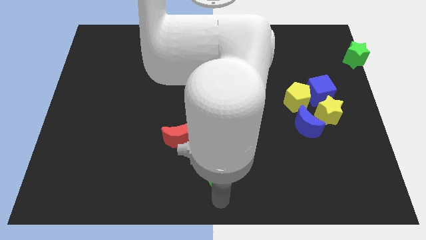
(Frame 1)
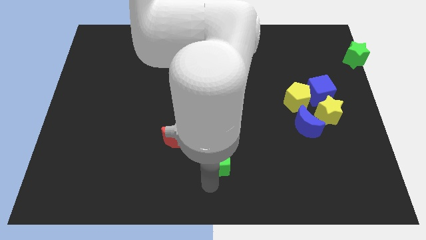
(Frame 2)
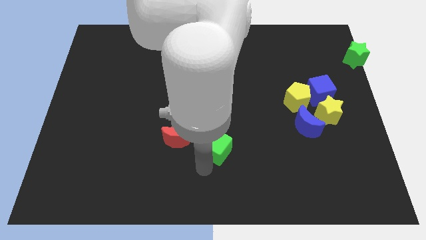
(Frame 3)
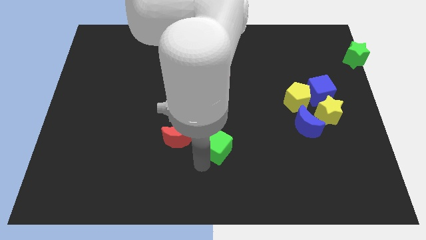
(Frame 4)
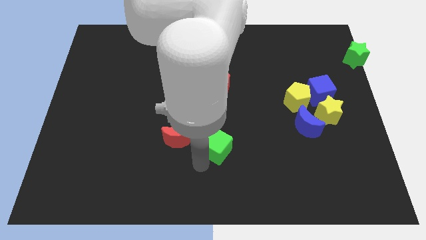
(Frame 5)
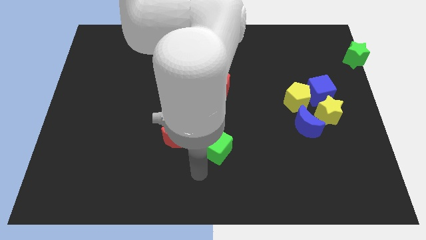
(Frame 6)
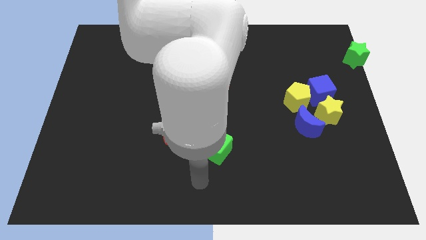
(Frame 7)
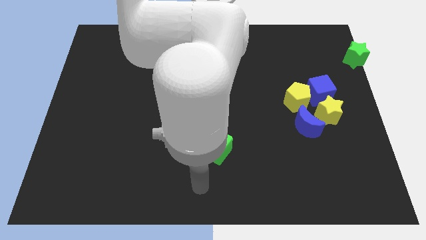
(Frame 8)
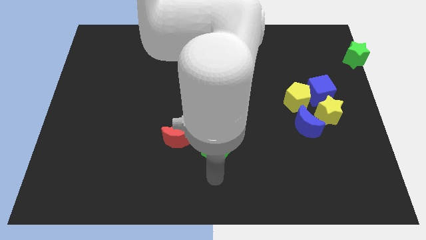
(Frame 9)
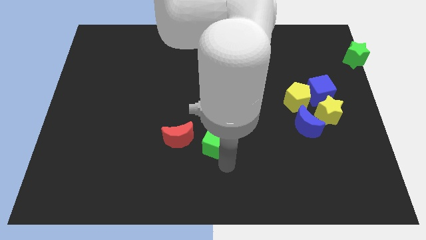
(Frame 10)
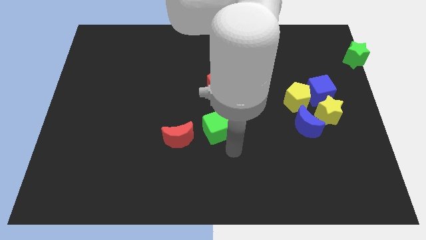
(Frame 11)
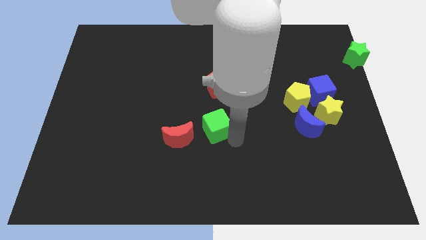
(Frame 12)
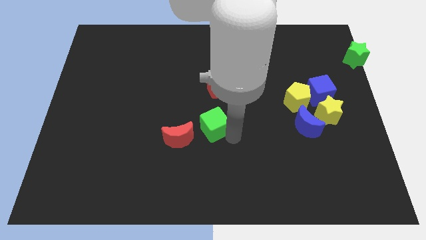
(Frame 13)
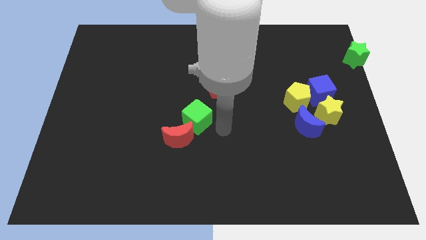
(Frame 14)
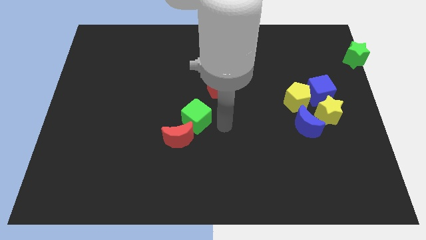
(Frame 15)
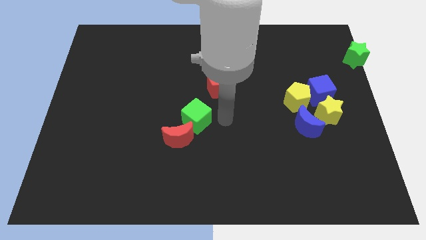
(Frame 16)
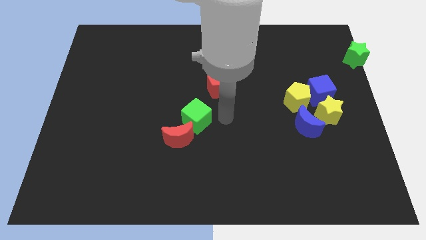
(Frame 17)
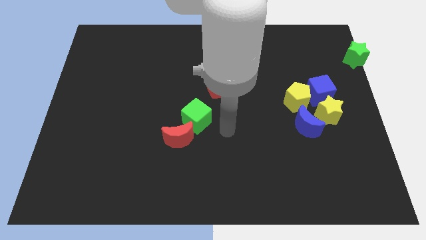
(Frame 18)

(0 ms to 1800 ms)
put the green cube on the top right of the red crescent

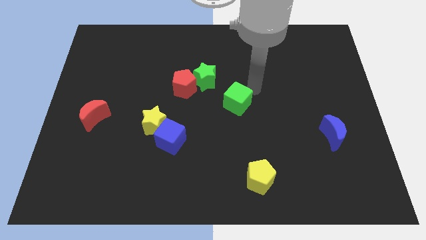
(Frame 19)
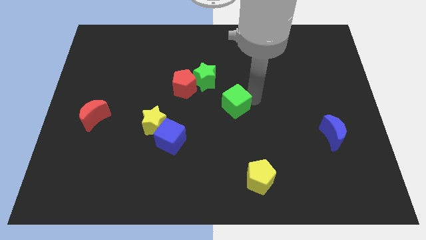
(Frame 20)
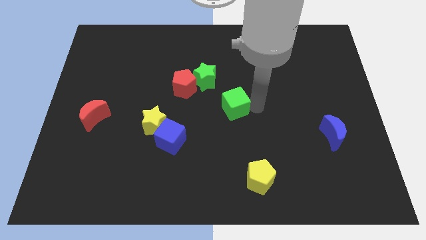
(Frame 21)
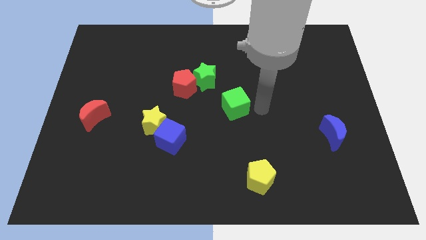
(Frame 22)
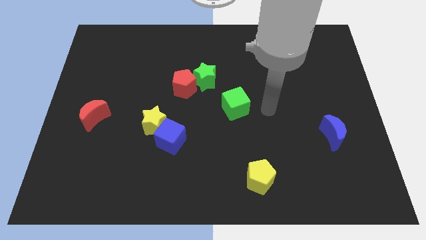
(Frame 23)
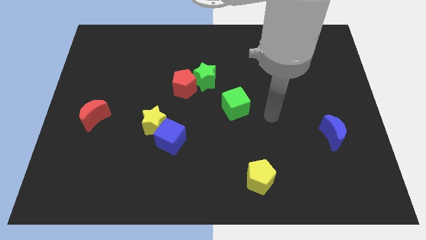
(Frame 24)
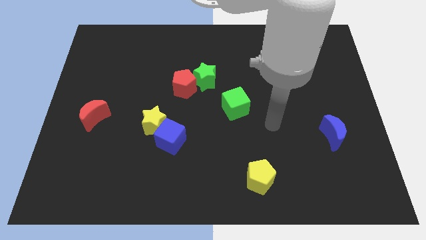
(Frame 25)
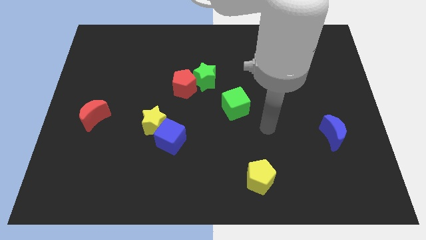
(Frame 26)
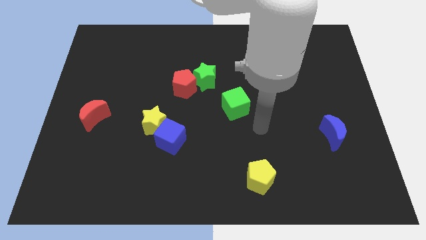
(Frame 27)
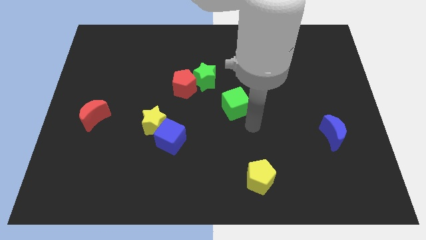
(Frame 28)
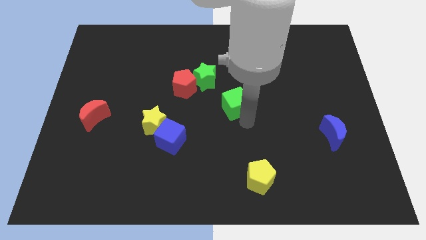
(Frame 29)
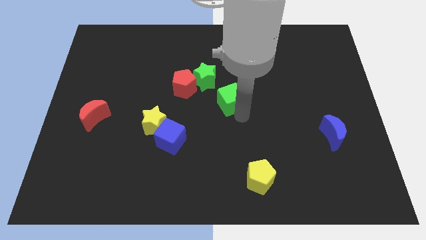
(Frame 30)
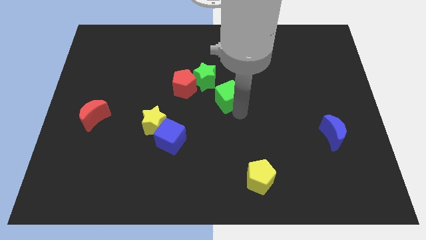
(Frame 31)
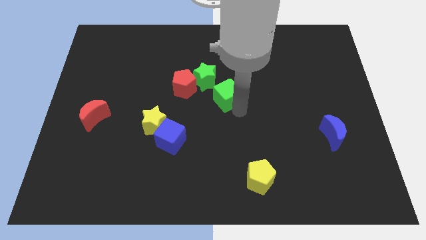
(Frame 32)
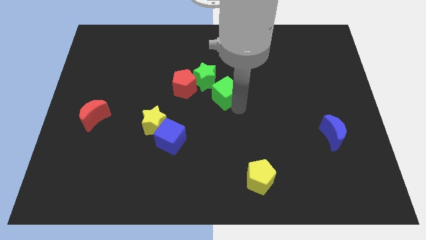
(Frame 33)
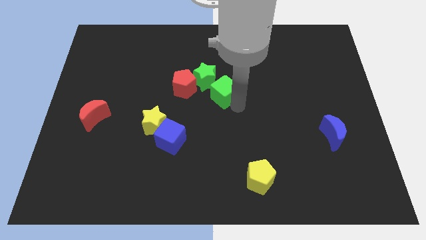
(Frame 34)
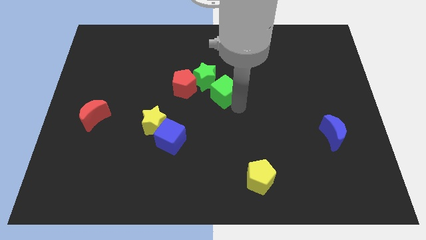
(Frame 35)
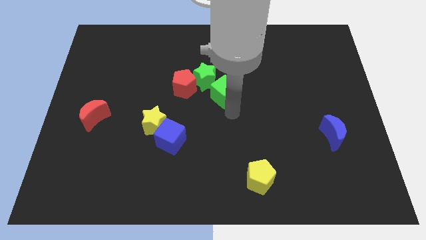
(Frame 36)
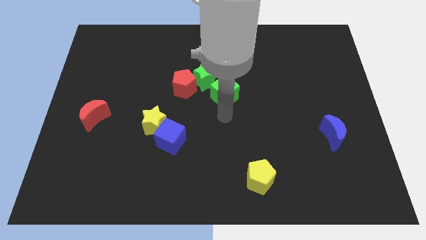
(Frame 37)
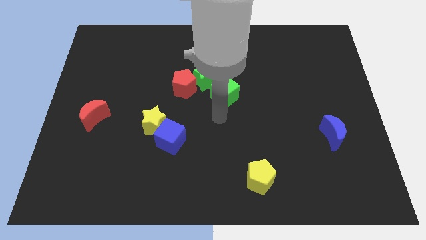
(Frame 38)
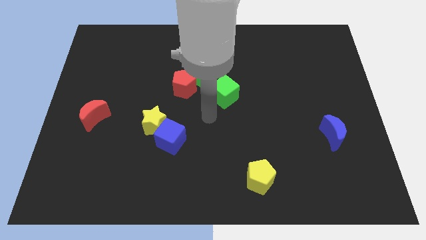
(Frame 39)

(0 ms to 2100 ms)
push the green cube to the center of the board

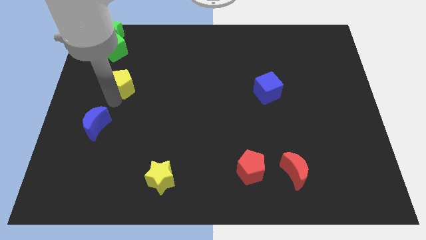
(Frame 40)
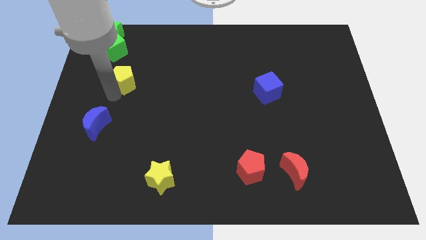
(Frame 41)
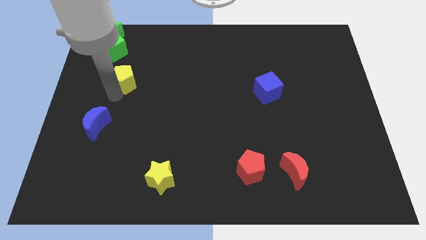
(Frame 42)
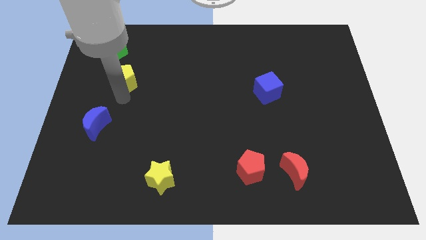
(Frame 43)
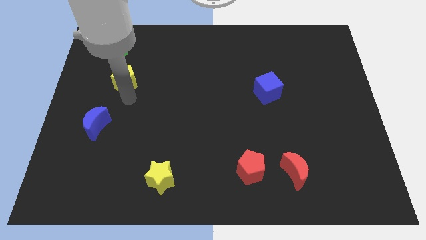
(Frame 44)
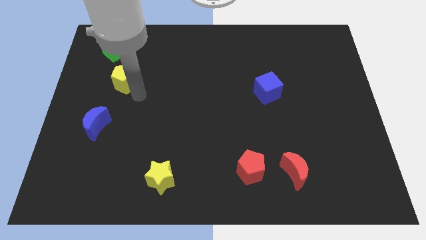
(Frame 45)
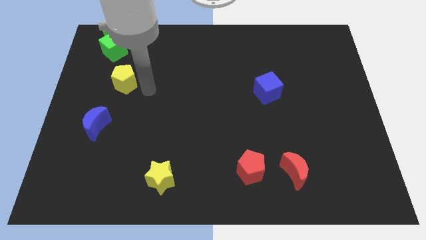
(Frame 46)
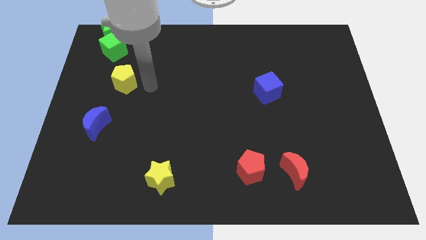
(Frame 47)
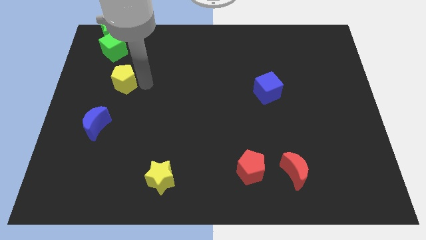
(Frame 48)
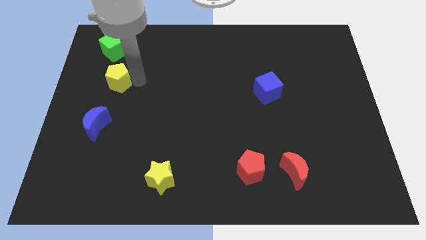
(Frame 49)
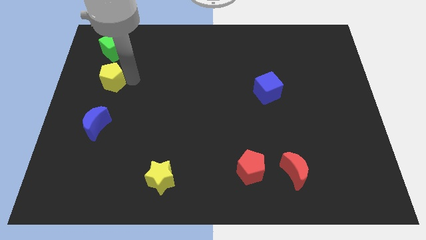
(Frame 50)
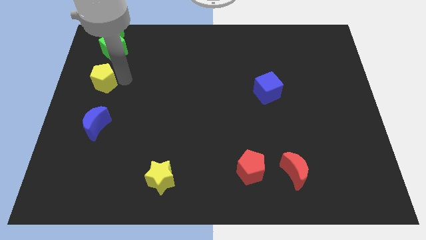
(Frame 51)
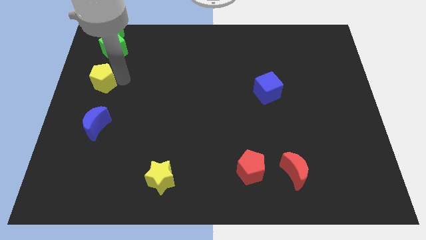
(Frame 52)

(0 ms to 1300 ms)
place yellow pentagon below green cube

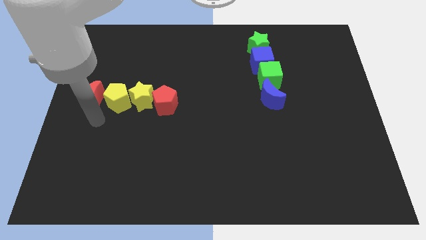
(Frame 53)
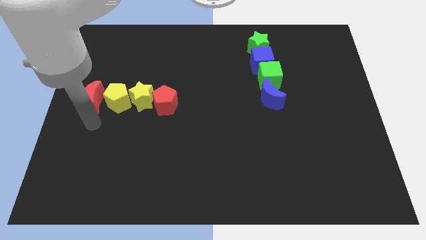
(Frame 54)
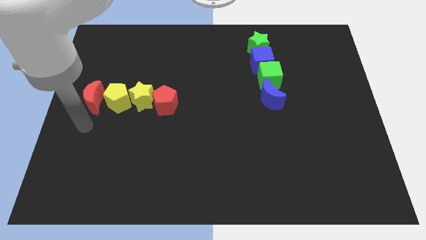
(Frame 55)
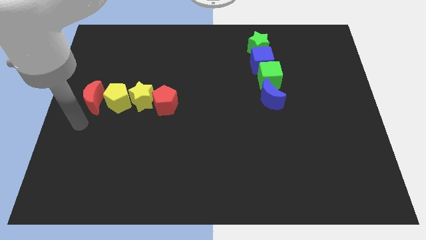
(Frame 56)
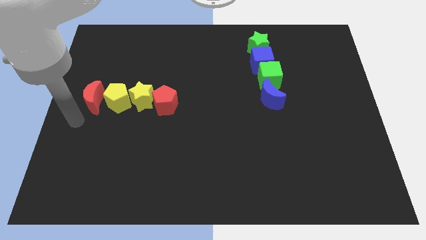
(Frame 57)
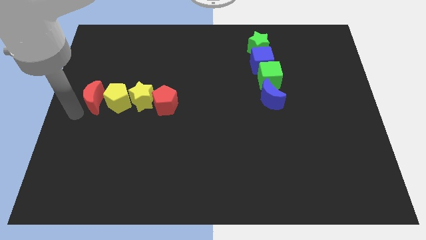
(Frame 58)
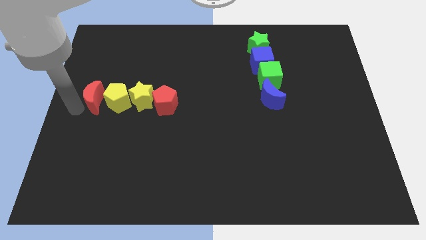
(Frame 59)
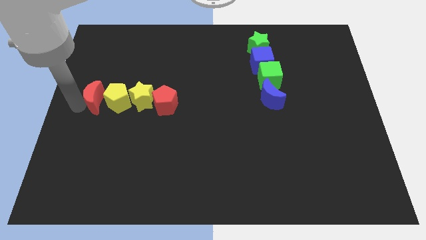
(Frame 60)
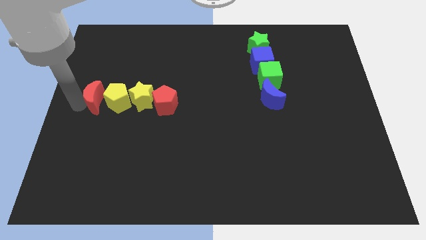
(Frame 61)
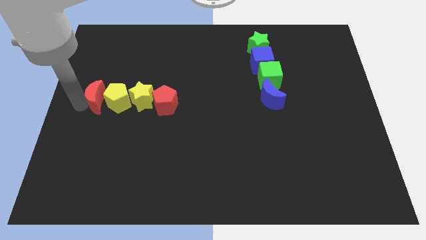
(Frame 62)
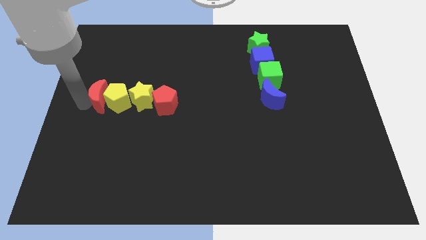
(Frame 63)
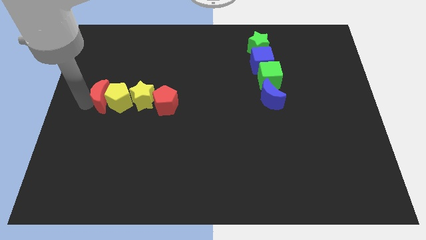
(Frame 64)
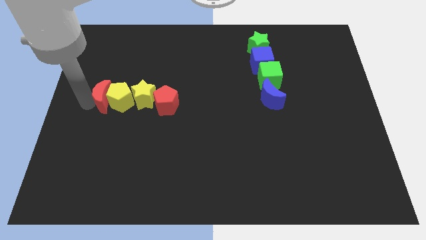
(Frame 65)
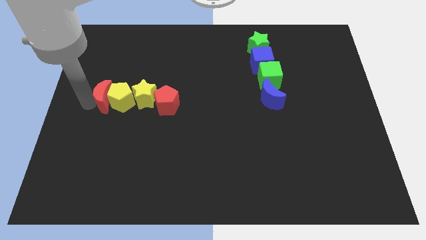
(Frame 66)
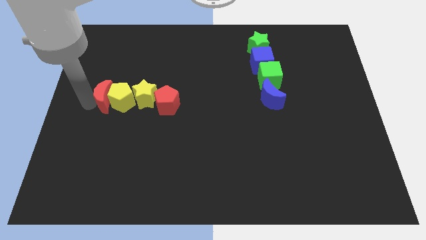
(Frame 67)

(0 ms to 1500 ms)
place the red crescent to the left of the yellow pentagon

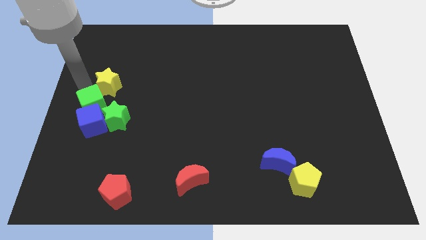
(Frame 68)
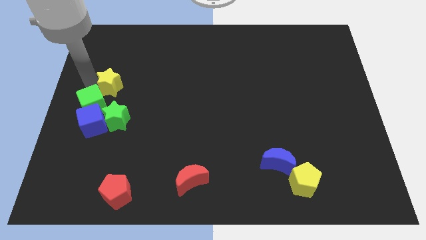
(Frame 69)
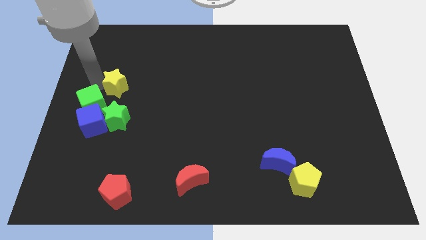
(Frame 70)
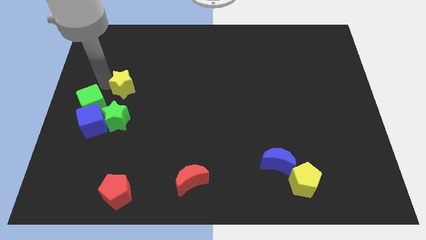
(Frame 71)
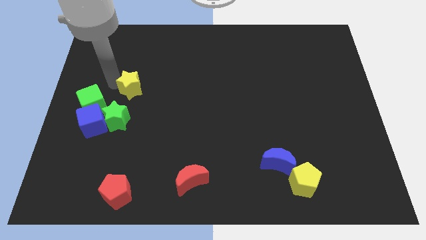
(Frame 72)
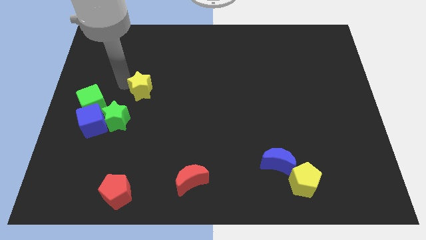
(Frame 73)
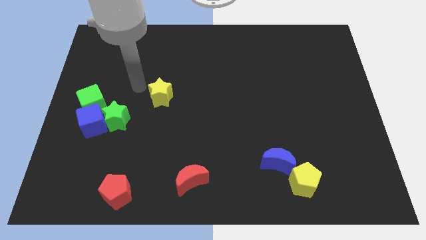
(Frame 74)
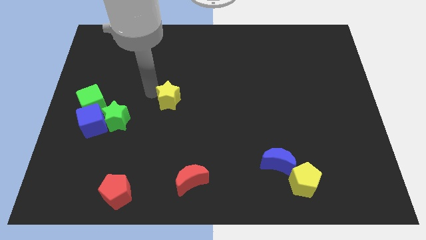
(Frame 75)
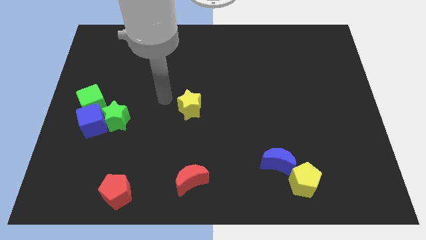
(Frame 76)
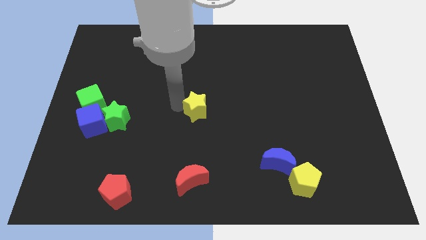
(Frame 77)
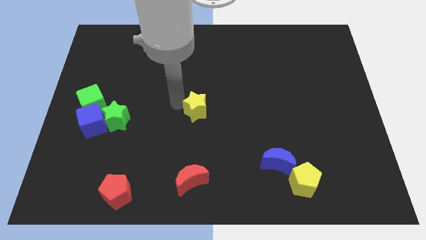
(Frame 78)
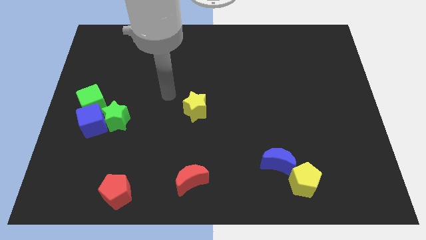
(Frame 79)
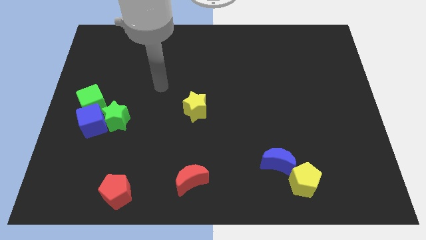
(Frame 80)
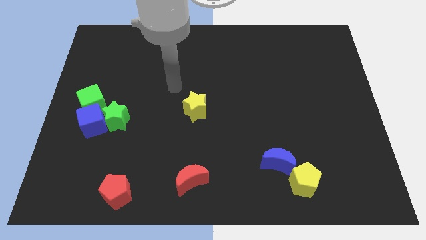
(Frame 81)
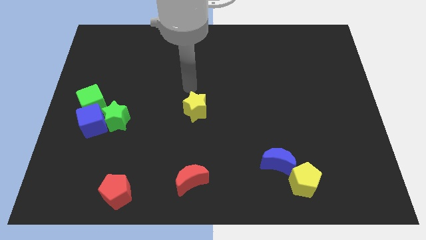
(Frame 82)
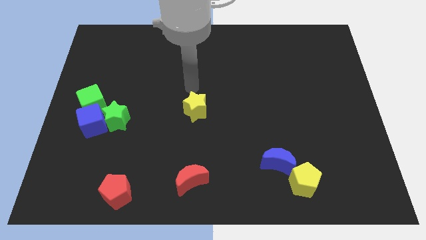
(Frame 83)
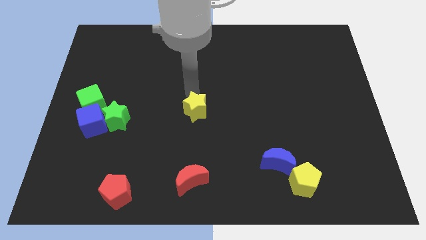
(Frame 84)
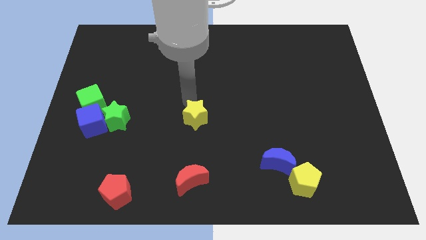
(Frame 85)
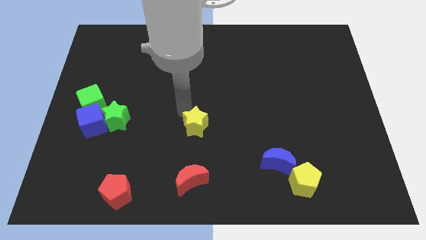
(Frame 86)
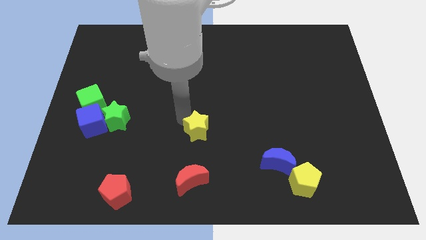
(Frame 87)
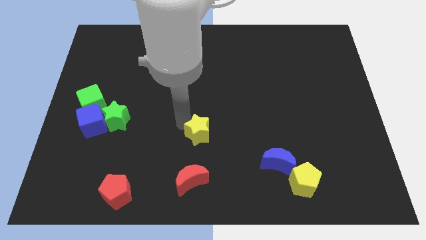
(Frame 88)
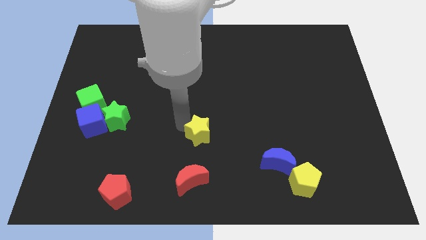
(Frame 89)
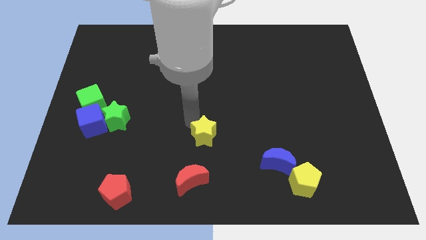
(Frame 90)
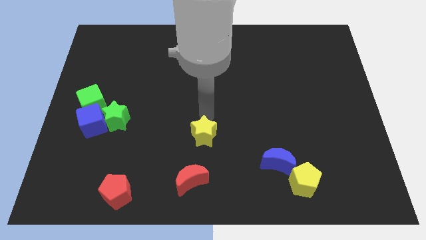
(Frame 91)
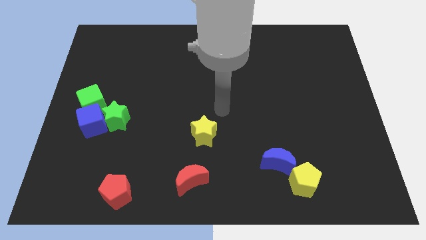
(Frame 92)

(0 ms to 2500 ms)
move the yellow star on top of the red crescent
